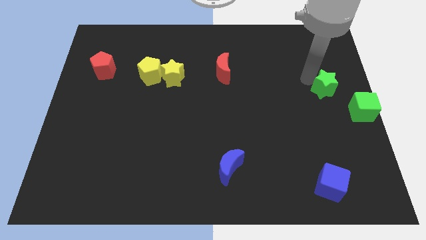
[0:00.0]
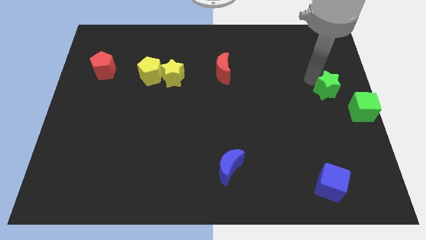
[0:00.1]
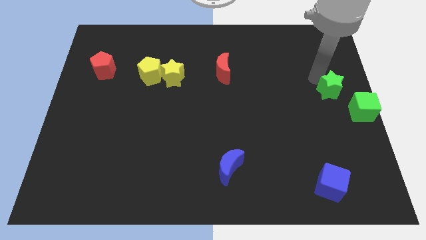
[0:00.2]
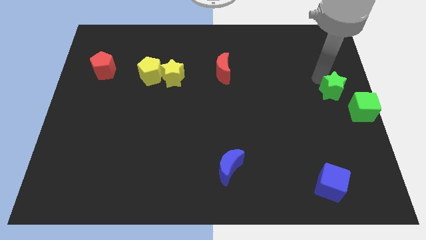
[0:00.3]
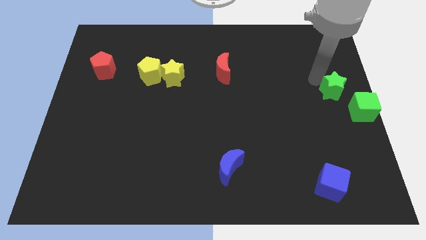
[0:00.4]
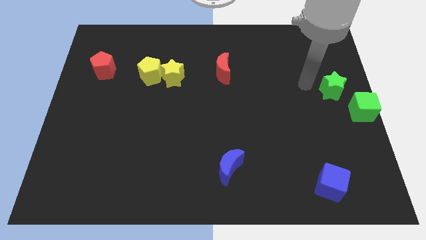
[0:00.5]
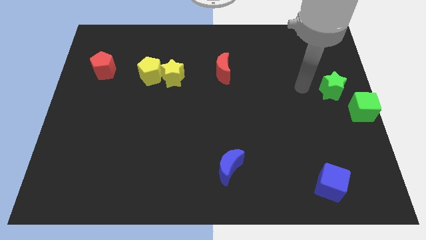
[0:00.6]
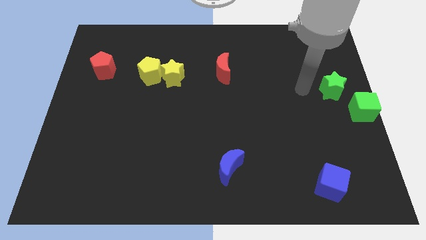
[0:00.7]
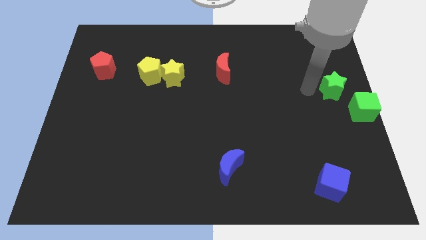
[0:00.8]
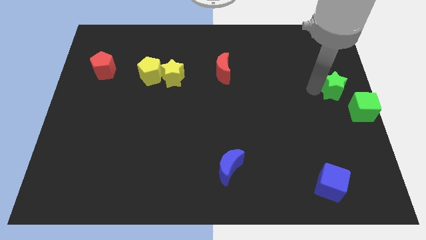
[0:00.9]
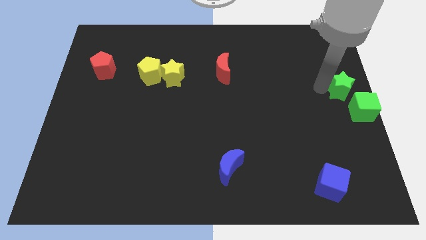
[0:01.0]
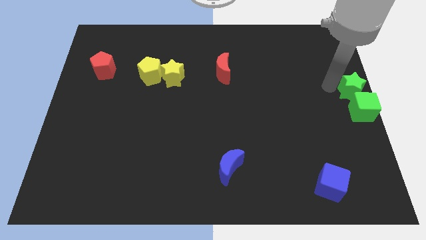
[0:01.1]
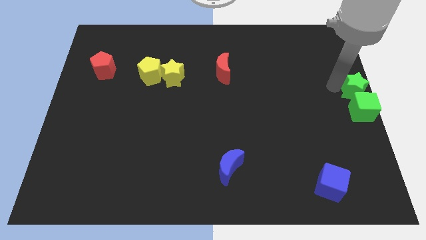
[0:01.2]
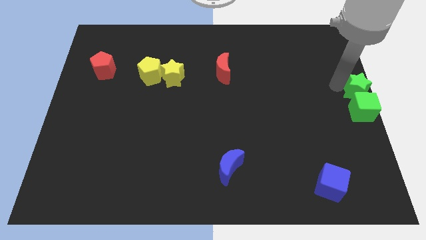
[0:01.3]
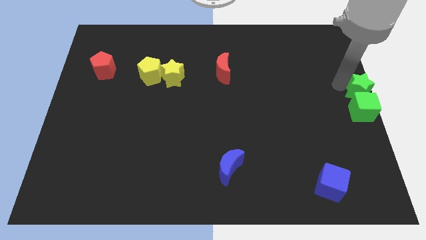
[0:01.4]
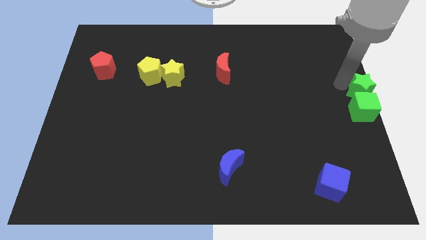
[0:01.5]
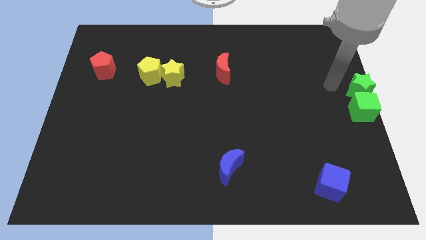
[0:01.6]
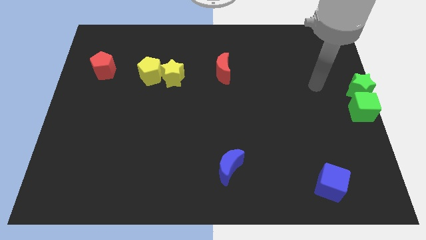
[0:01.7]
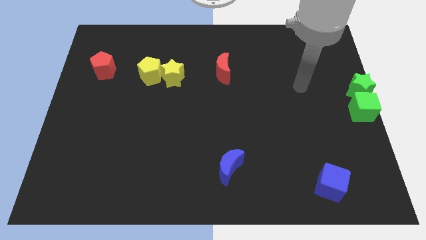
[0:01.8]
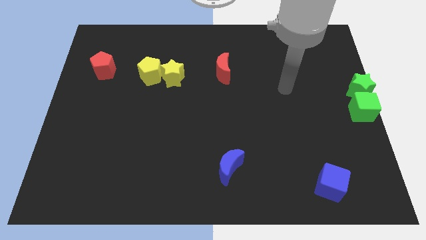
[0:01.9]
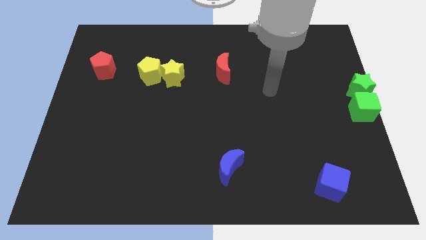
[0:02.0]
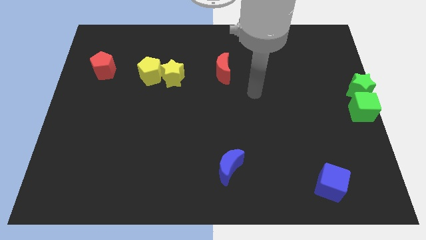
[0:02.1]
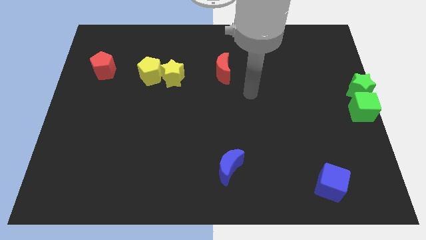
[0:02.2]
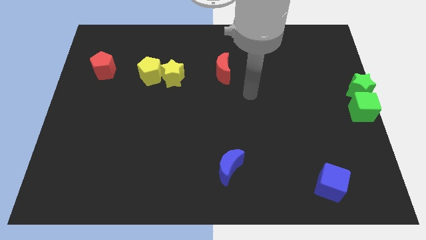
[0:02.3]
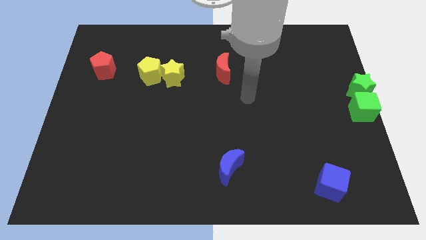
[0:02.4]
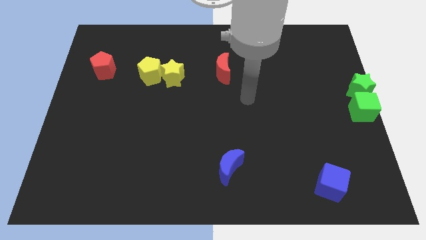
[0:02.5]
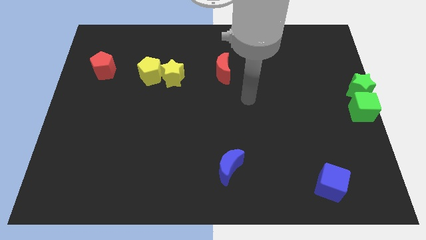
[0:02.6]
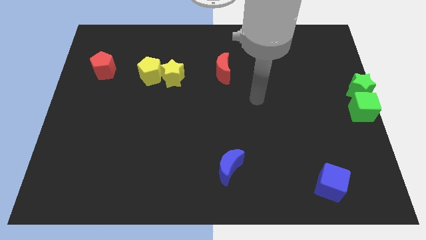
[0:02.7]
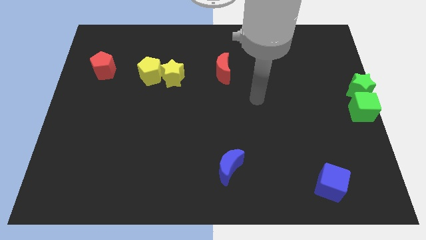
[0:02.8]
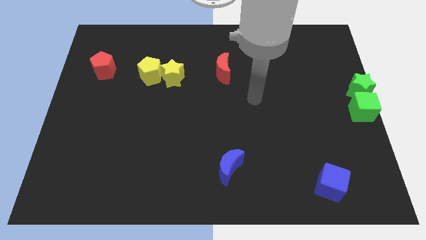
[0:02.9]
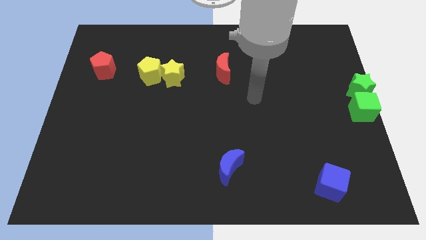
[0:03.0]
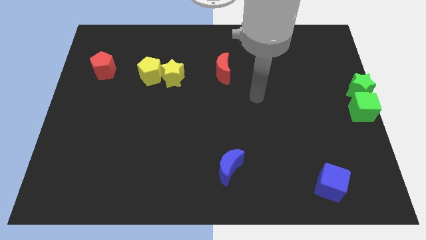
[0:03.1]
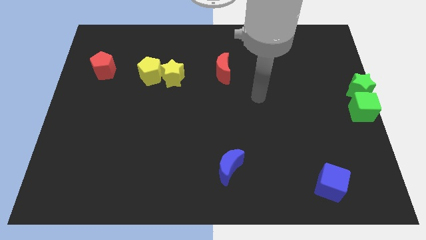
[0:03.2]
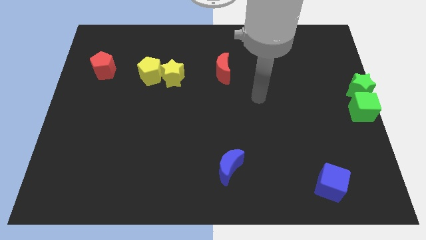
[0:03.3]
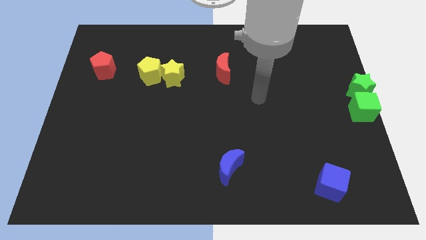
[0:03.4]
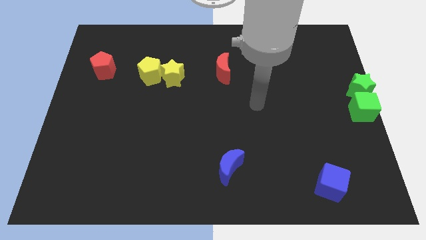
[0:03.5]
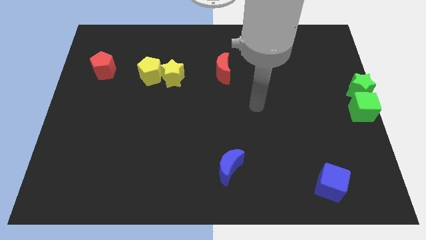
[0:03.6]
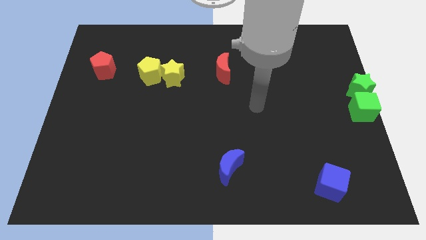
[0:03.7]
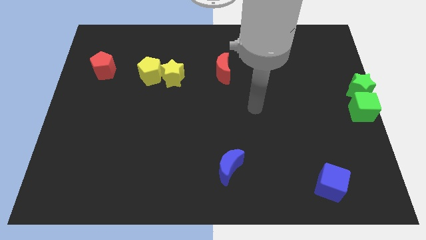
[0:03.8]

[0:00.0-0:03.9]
move the green star to the right center of the board

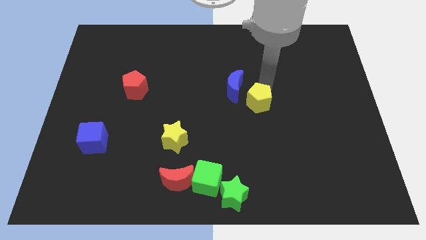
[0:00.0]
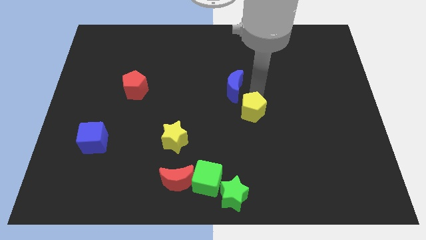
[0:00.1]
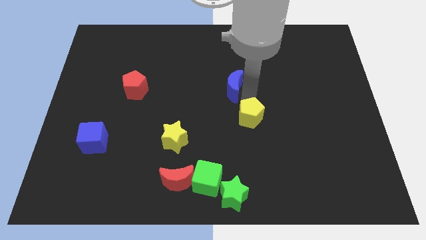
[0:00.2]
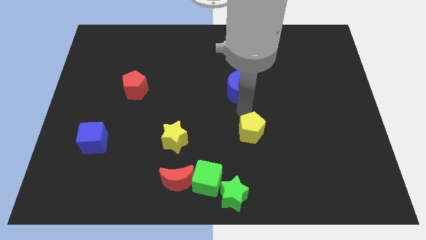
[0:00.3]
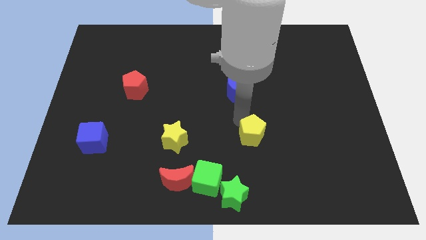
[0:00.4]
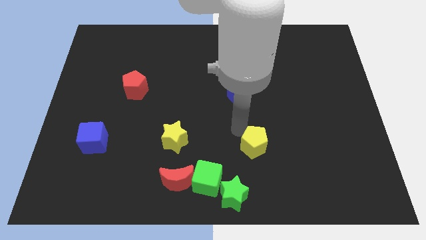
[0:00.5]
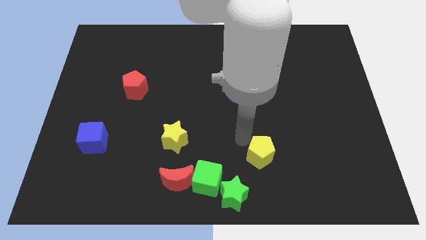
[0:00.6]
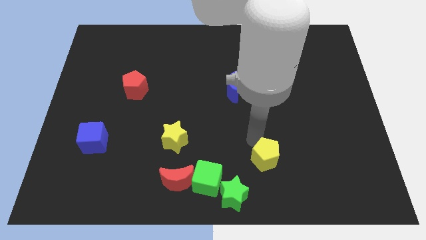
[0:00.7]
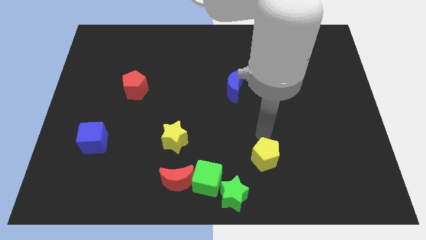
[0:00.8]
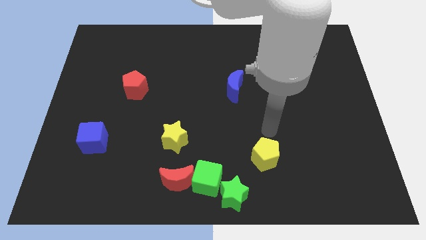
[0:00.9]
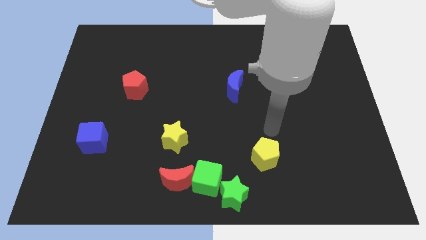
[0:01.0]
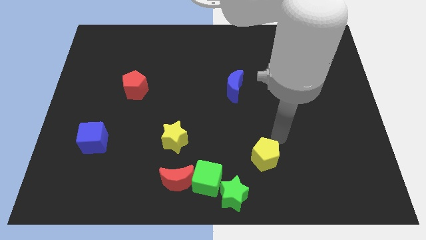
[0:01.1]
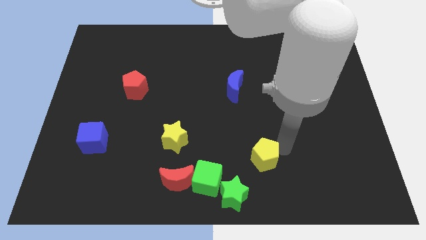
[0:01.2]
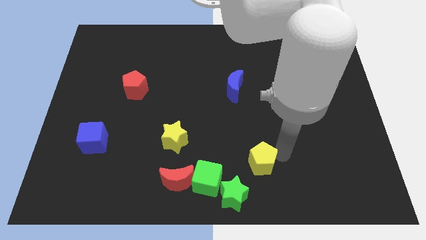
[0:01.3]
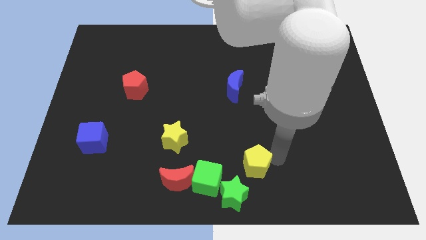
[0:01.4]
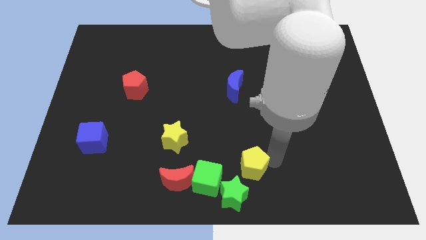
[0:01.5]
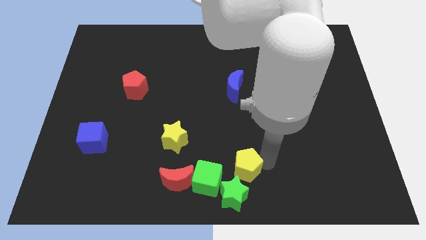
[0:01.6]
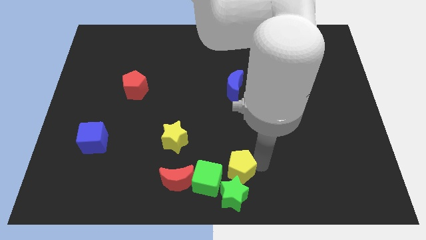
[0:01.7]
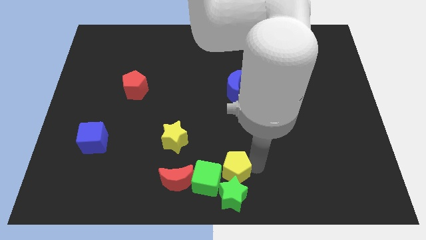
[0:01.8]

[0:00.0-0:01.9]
push the yellow pentagon towards the top to the green star

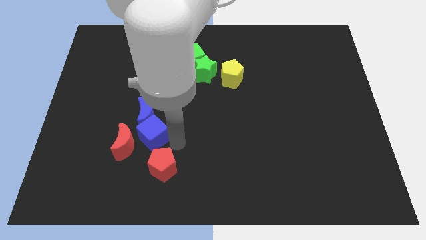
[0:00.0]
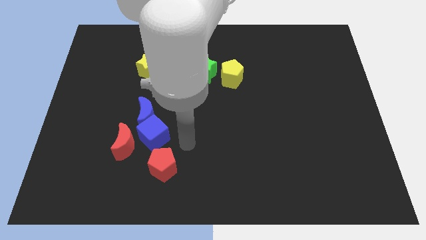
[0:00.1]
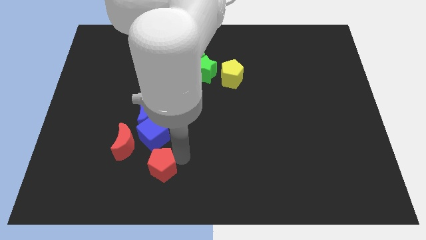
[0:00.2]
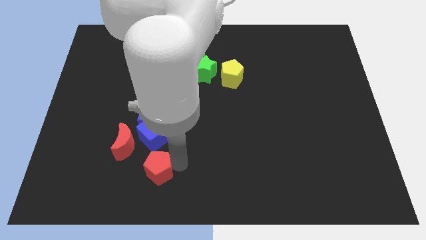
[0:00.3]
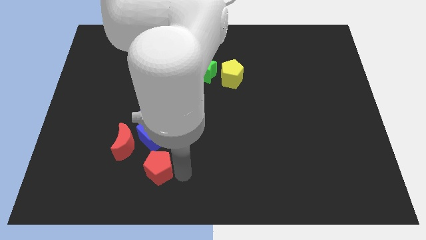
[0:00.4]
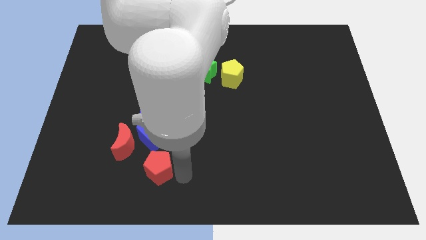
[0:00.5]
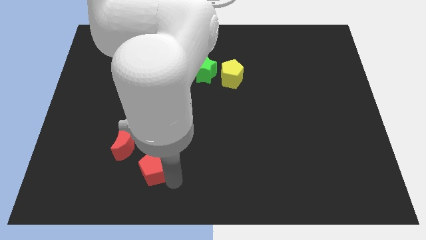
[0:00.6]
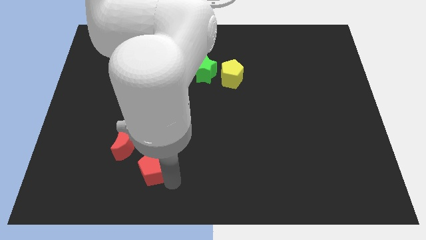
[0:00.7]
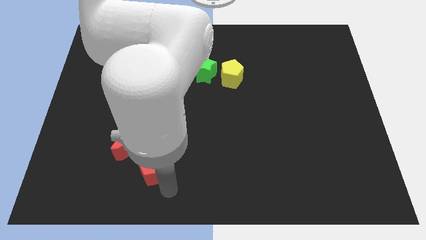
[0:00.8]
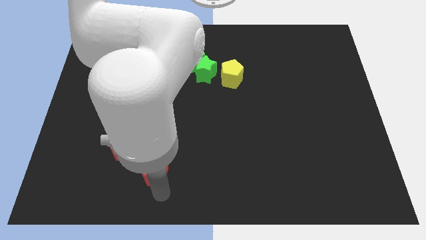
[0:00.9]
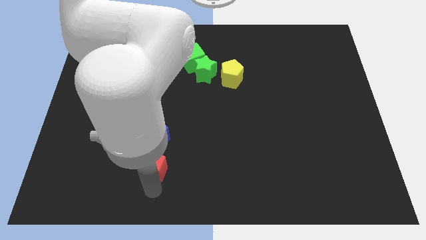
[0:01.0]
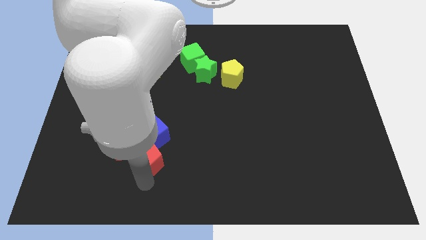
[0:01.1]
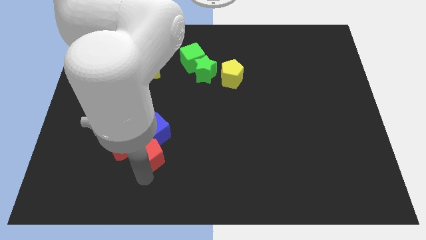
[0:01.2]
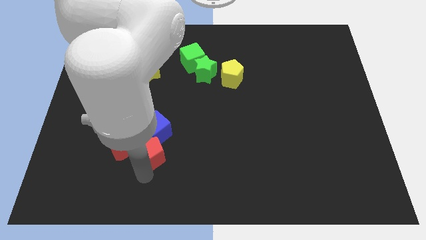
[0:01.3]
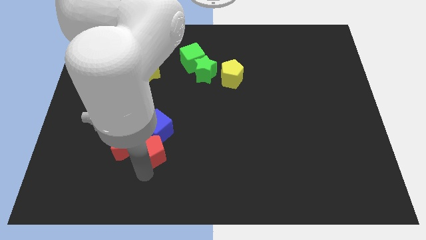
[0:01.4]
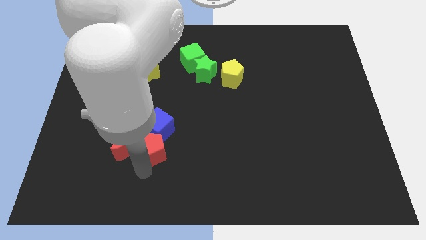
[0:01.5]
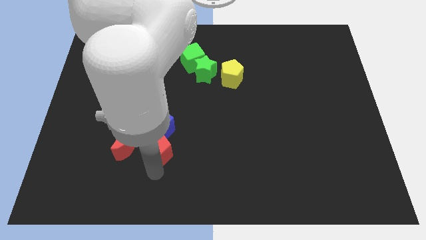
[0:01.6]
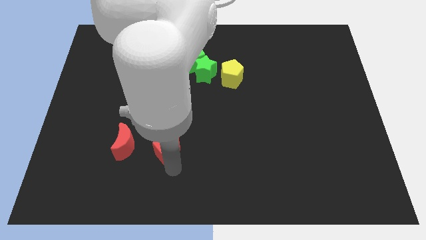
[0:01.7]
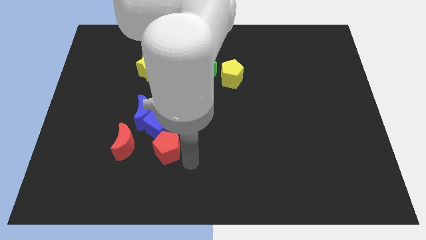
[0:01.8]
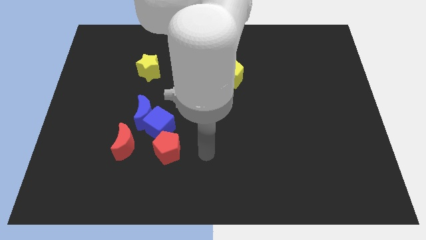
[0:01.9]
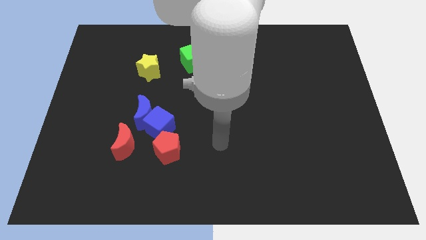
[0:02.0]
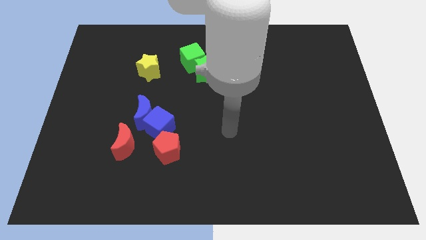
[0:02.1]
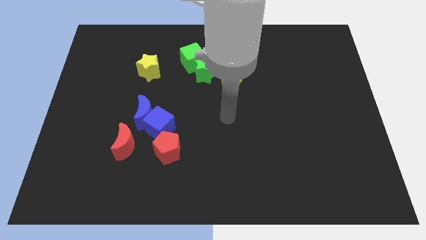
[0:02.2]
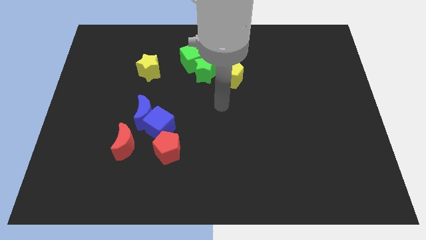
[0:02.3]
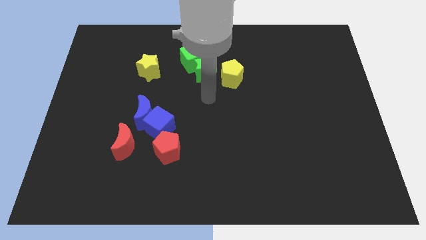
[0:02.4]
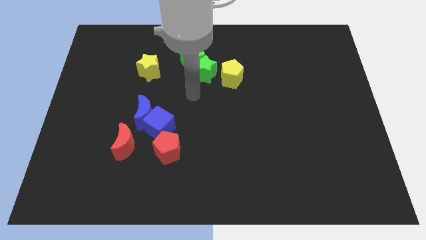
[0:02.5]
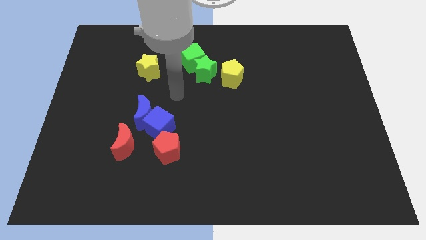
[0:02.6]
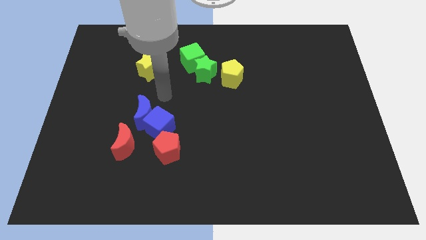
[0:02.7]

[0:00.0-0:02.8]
move the red pentagon into the blue cube from the bottom

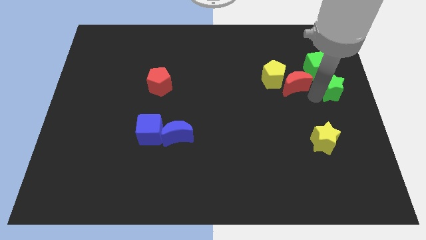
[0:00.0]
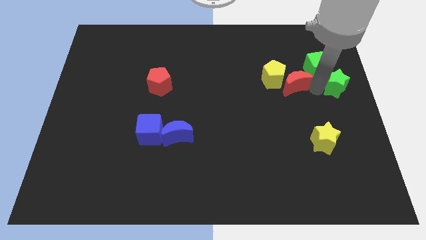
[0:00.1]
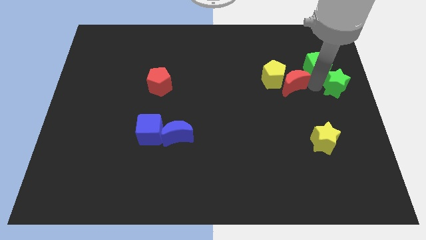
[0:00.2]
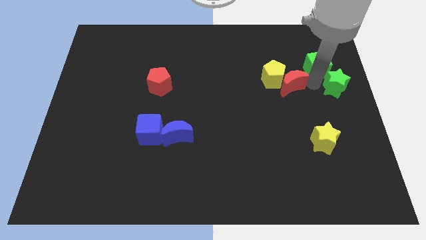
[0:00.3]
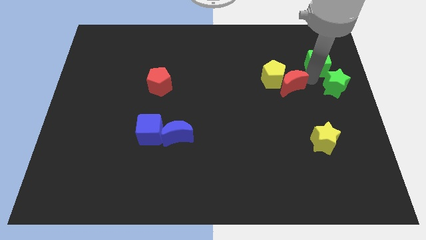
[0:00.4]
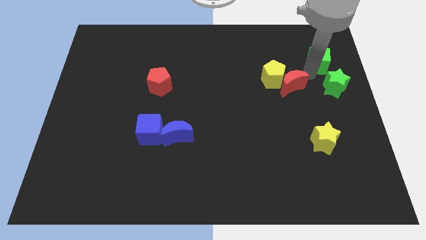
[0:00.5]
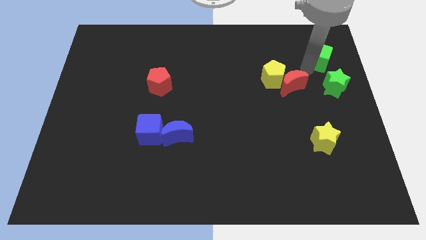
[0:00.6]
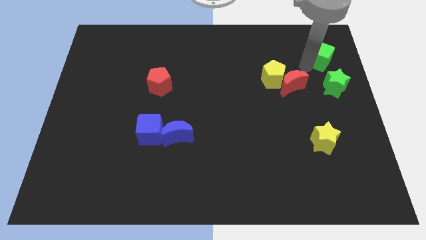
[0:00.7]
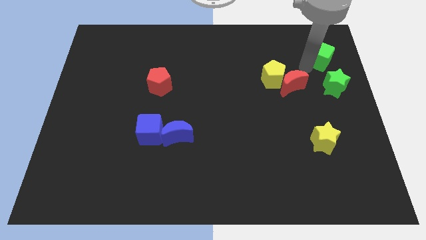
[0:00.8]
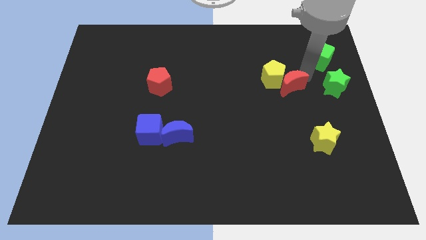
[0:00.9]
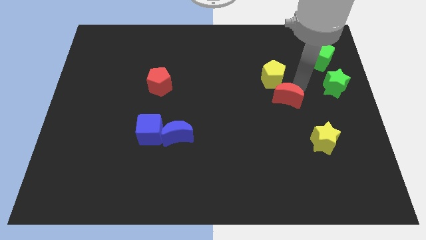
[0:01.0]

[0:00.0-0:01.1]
push red moon and the green cube away from each other
